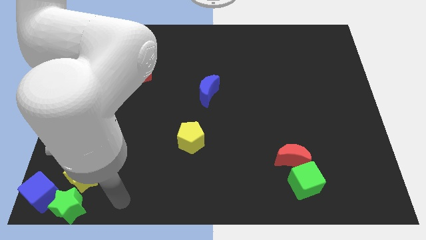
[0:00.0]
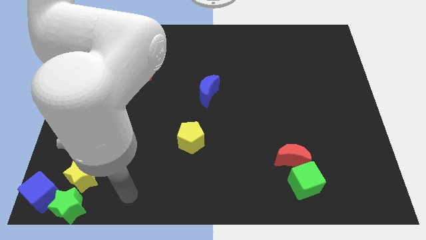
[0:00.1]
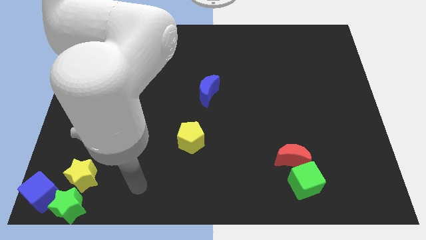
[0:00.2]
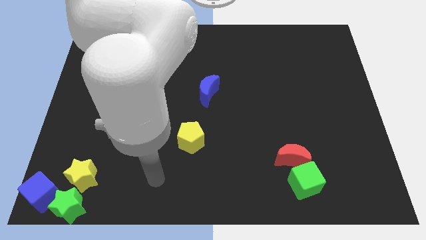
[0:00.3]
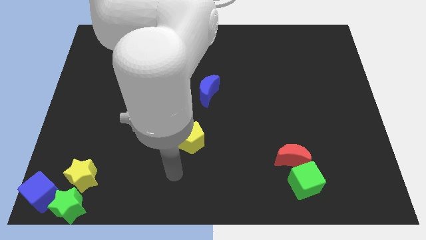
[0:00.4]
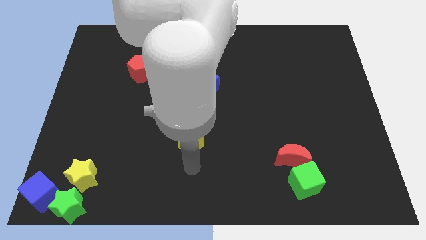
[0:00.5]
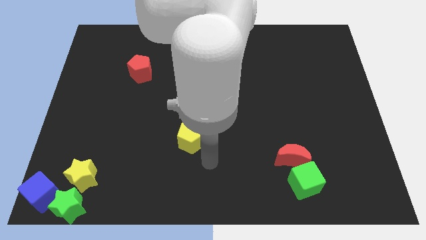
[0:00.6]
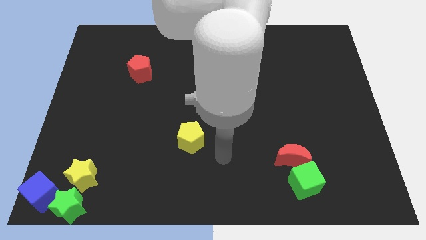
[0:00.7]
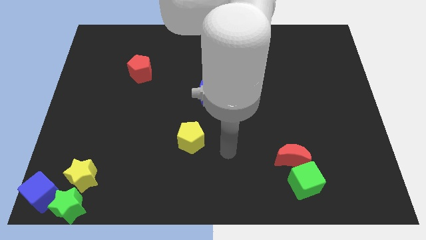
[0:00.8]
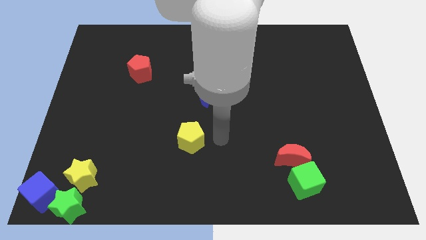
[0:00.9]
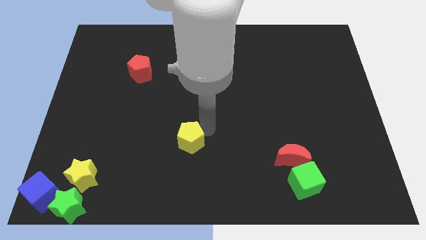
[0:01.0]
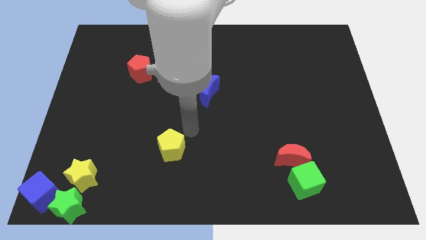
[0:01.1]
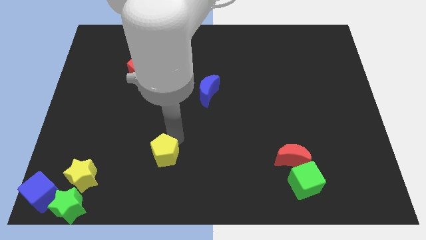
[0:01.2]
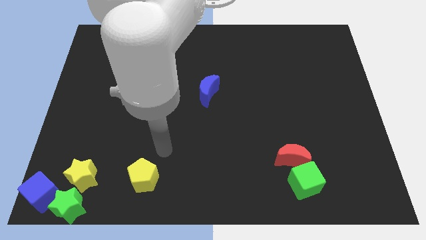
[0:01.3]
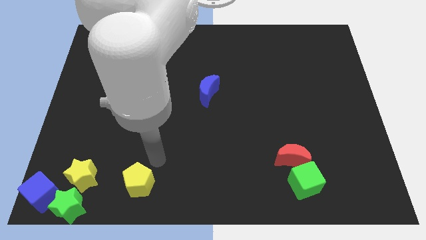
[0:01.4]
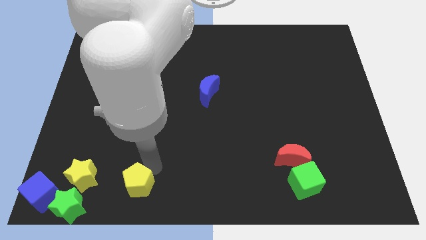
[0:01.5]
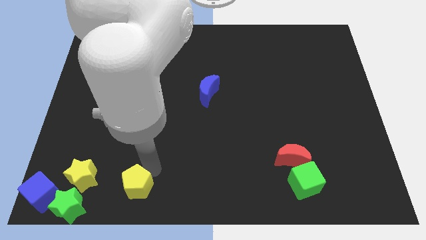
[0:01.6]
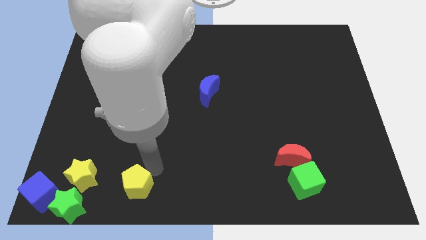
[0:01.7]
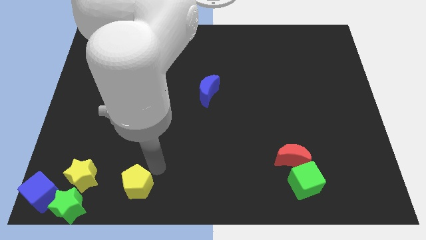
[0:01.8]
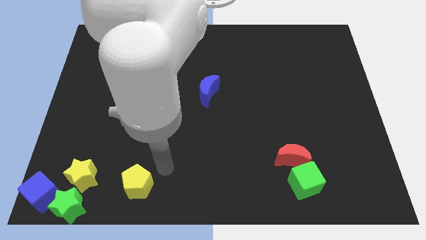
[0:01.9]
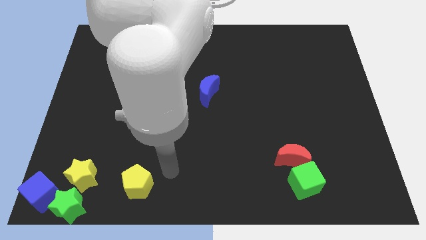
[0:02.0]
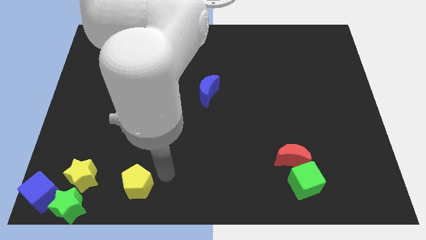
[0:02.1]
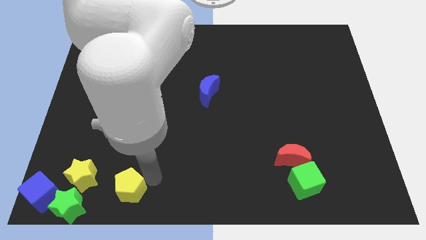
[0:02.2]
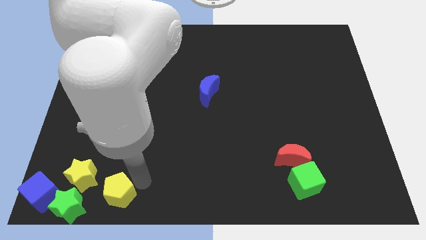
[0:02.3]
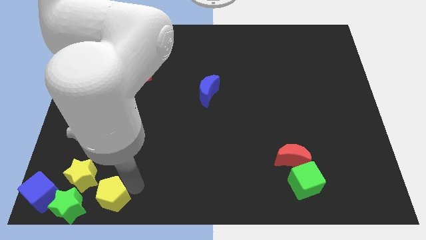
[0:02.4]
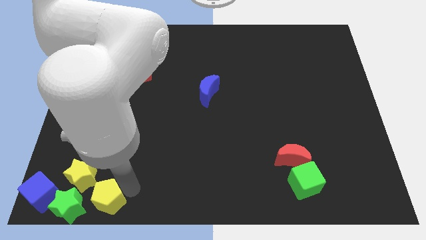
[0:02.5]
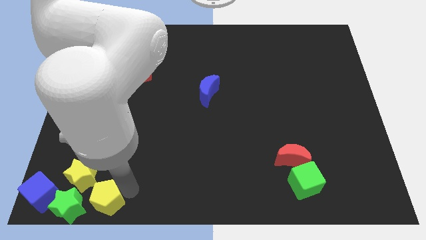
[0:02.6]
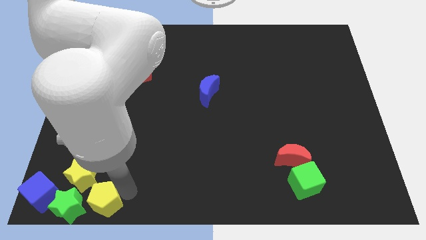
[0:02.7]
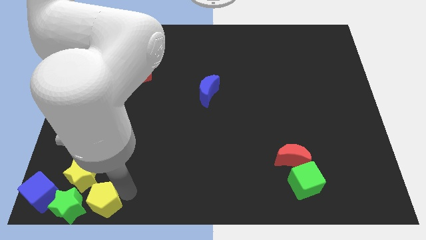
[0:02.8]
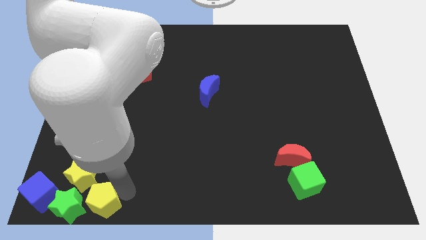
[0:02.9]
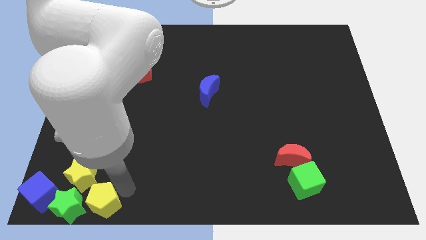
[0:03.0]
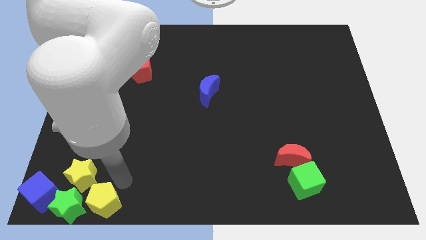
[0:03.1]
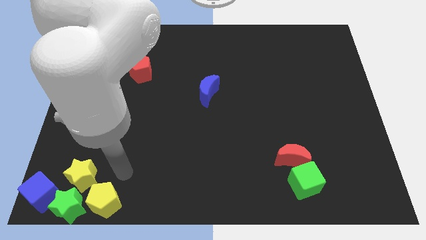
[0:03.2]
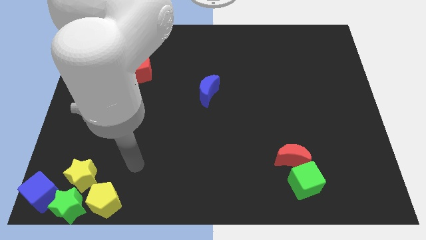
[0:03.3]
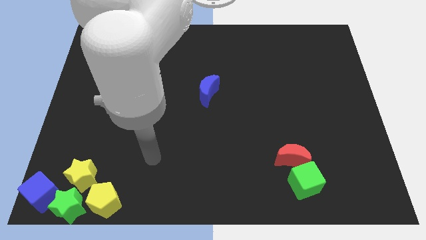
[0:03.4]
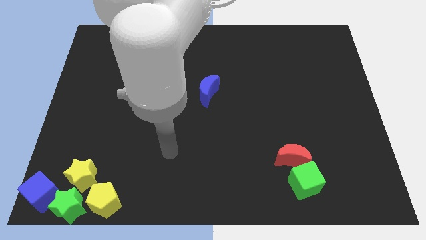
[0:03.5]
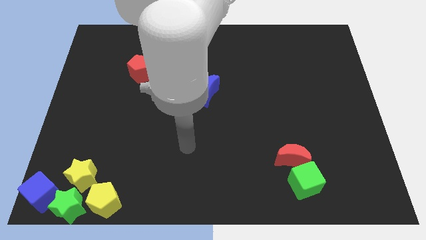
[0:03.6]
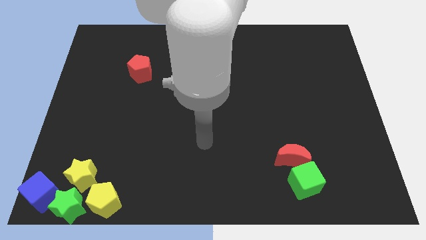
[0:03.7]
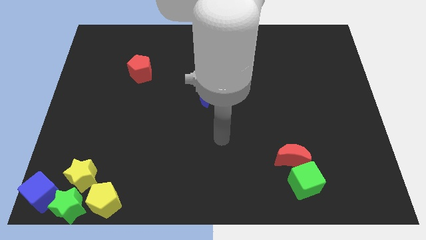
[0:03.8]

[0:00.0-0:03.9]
move the yellow pentagon right below the yellow star

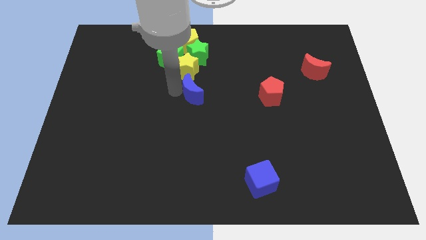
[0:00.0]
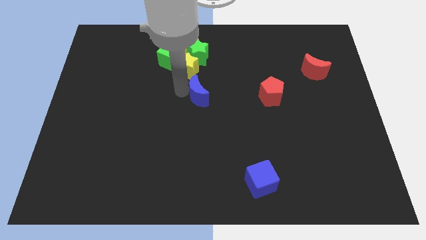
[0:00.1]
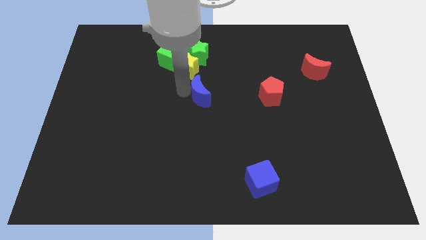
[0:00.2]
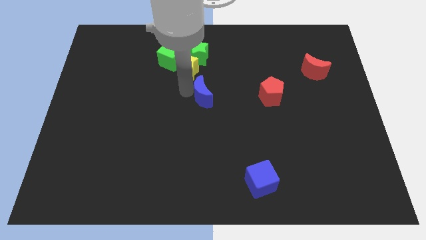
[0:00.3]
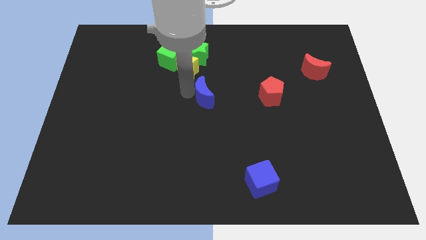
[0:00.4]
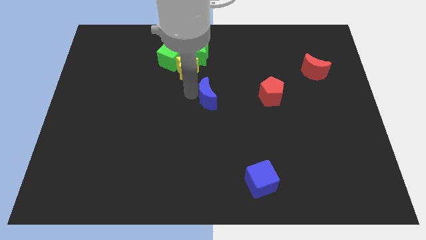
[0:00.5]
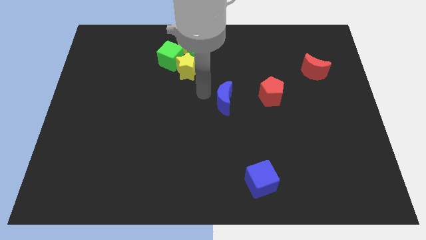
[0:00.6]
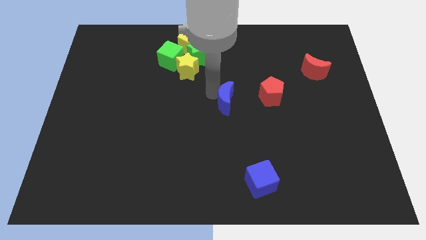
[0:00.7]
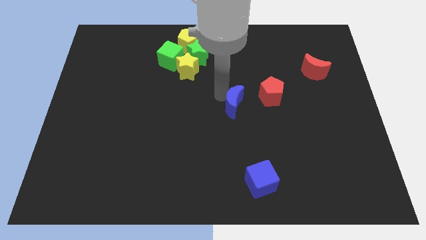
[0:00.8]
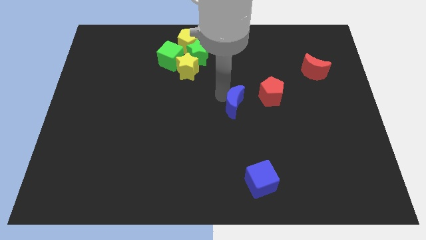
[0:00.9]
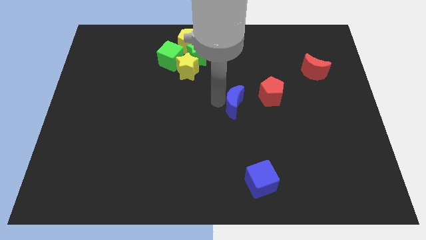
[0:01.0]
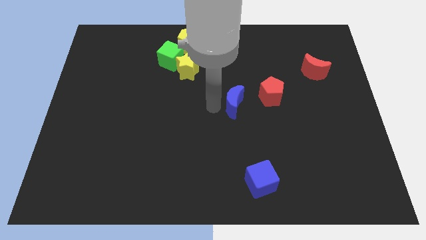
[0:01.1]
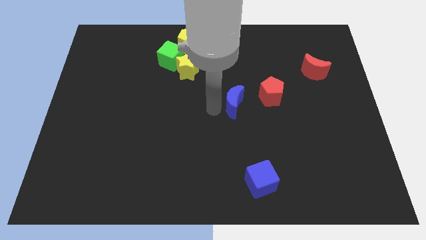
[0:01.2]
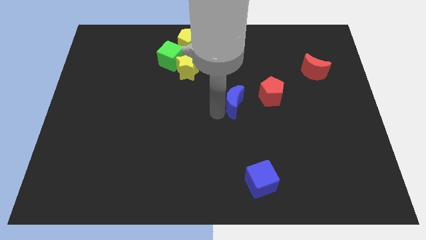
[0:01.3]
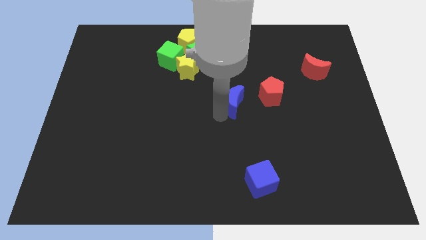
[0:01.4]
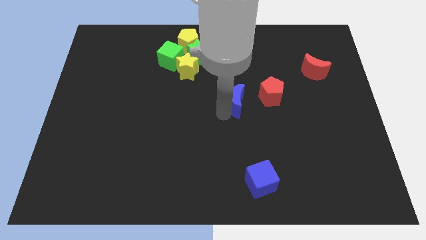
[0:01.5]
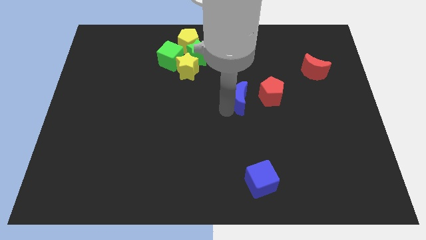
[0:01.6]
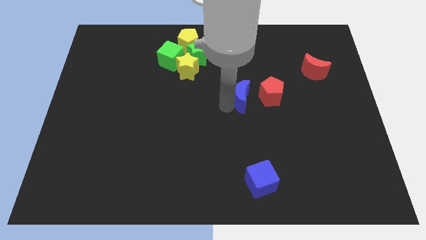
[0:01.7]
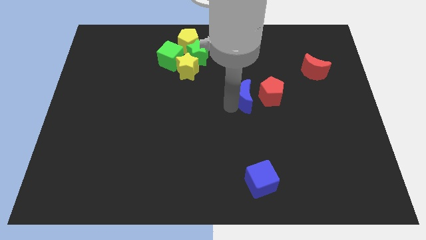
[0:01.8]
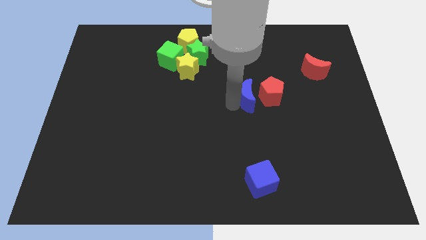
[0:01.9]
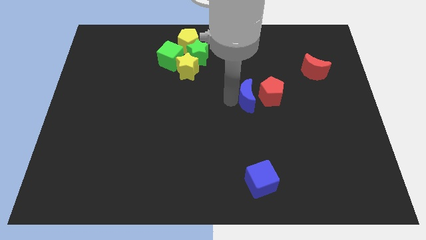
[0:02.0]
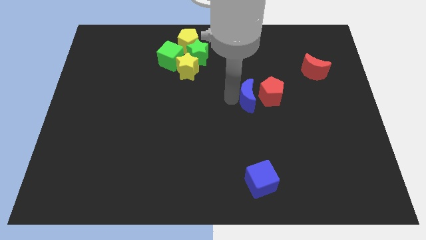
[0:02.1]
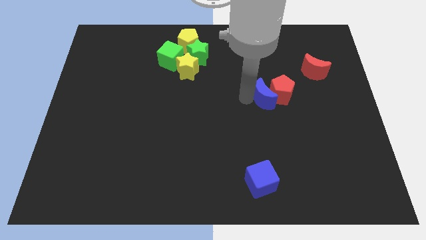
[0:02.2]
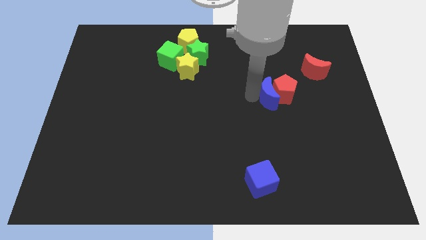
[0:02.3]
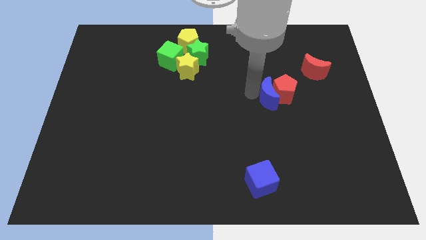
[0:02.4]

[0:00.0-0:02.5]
push blue cube into red pentagon

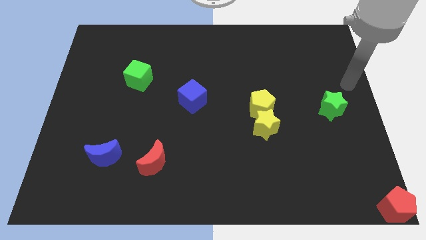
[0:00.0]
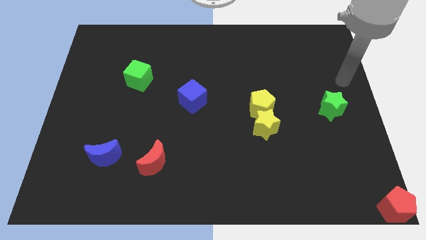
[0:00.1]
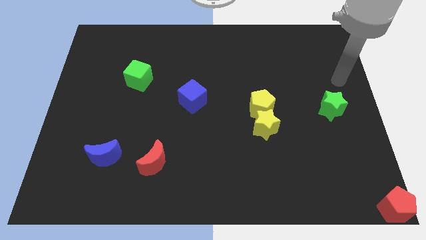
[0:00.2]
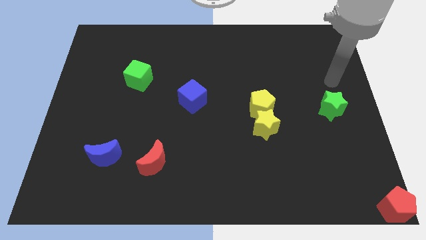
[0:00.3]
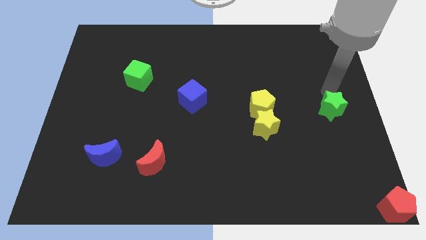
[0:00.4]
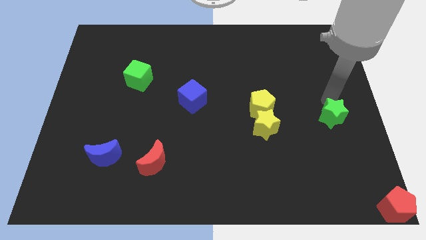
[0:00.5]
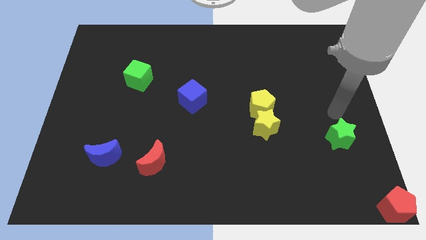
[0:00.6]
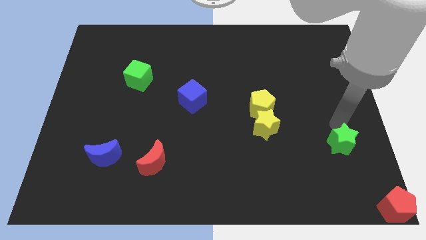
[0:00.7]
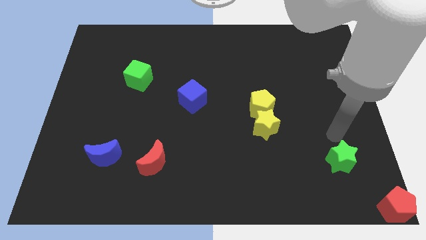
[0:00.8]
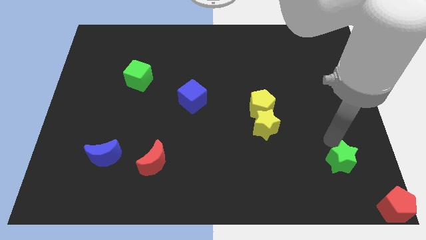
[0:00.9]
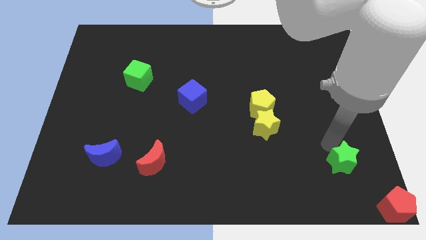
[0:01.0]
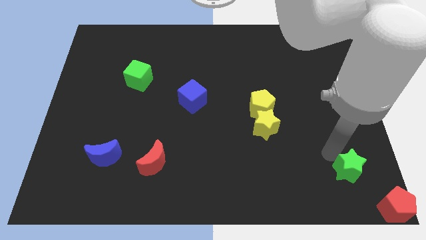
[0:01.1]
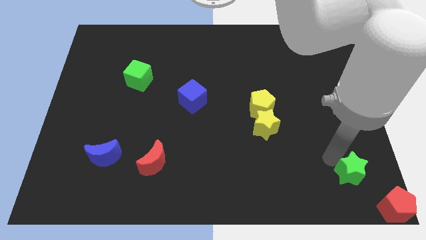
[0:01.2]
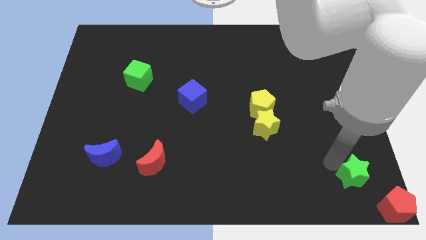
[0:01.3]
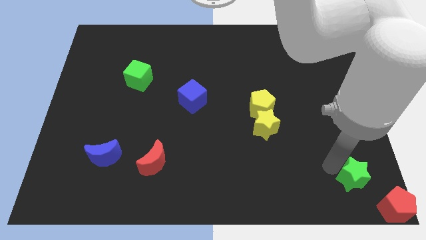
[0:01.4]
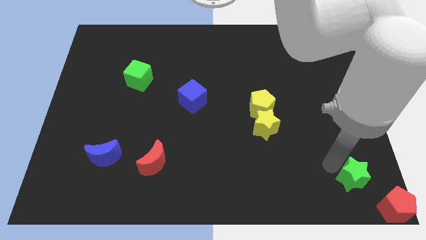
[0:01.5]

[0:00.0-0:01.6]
push the green star towards the red pentagon

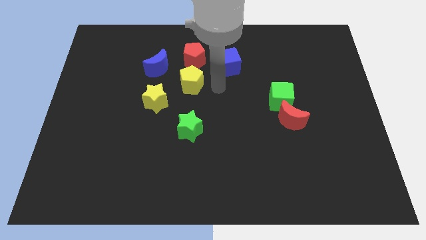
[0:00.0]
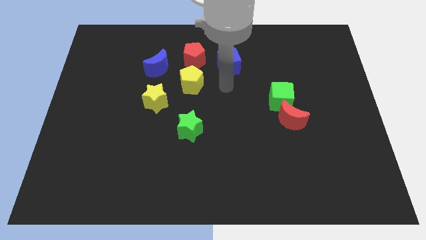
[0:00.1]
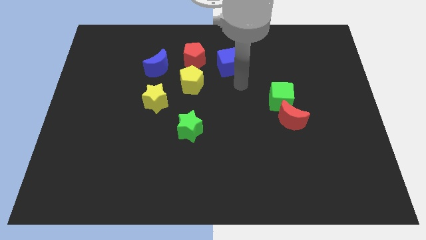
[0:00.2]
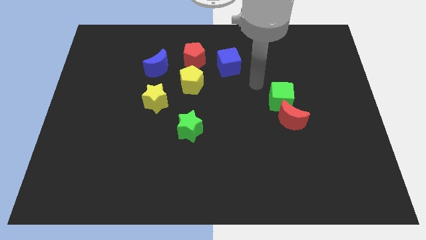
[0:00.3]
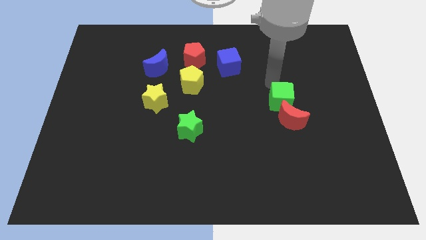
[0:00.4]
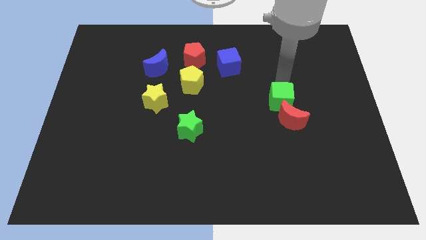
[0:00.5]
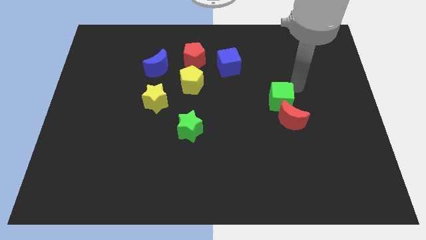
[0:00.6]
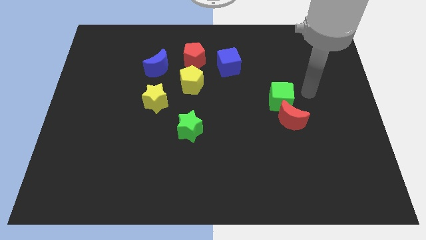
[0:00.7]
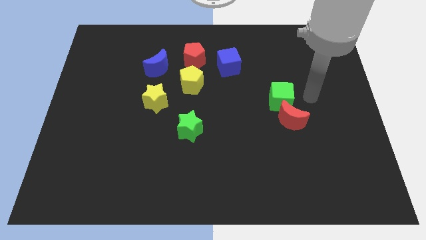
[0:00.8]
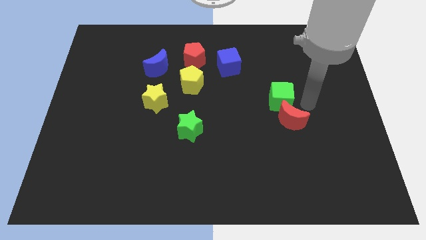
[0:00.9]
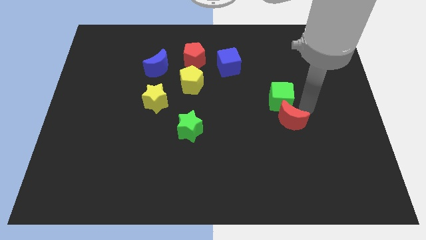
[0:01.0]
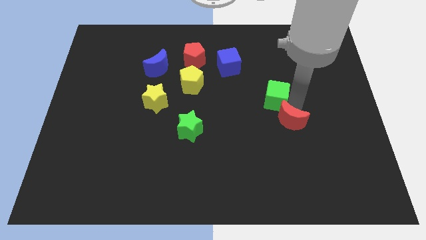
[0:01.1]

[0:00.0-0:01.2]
point at the right side of the green cube
